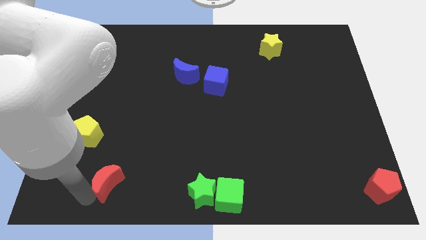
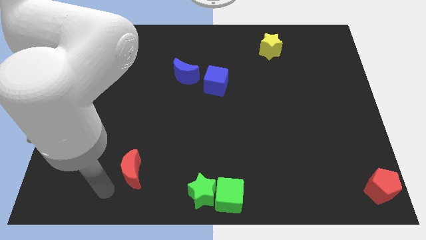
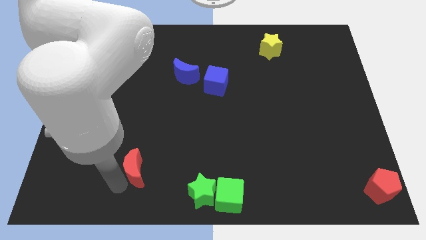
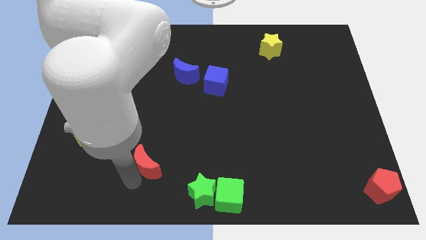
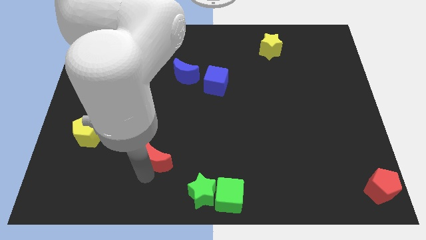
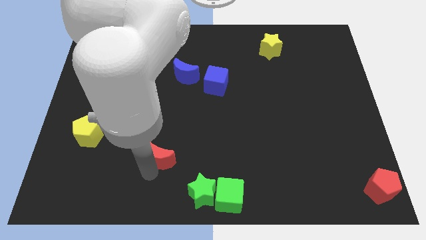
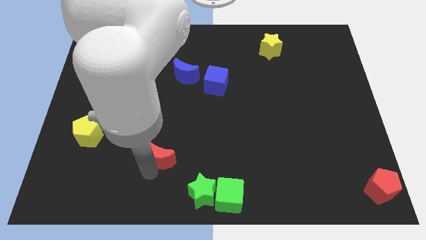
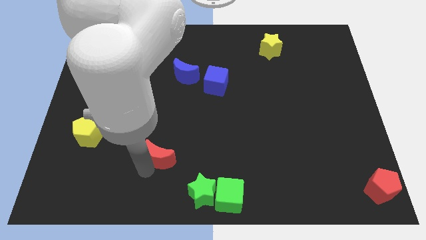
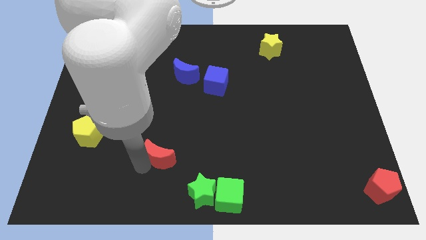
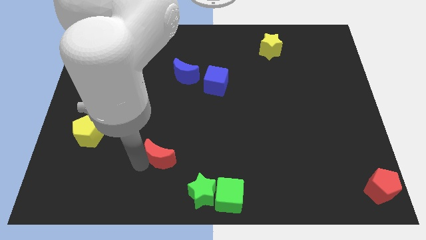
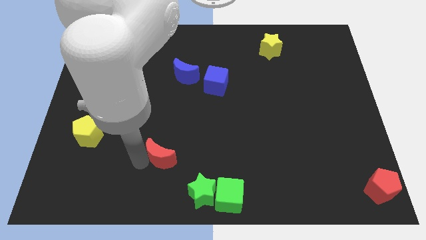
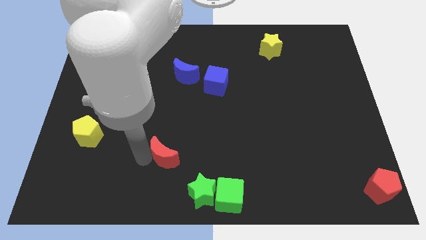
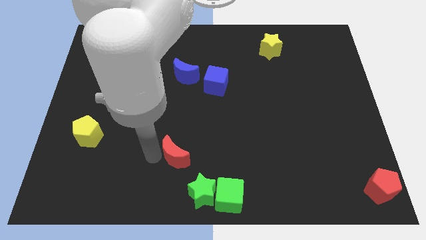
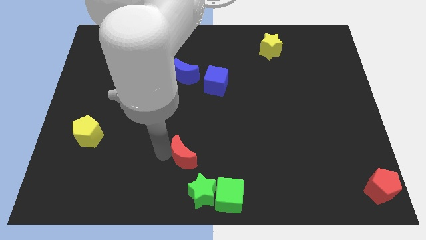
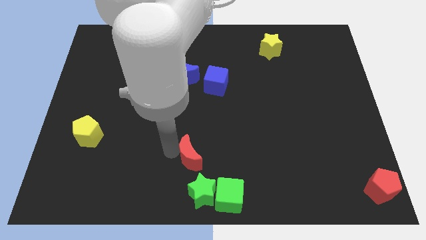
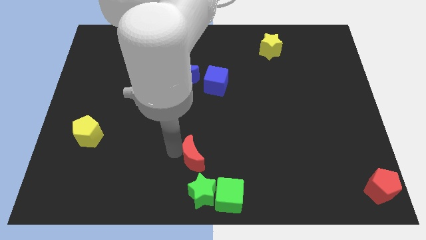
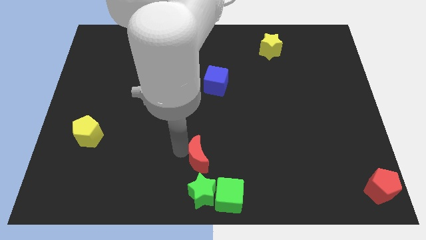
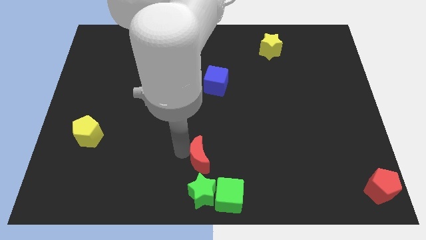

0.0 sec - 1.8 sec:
place the red crescent above the green star

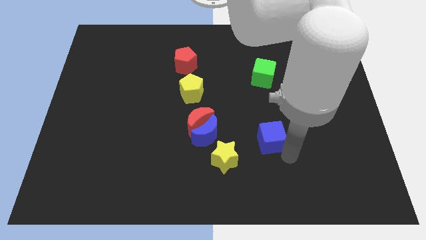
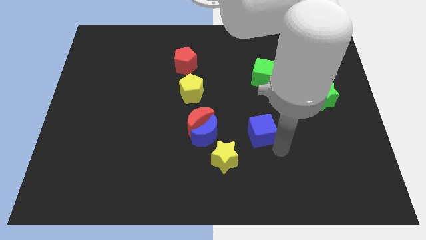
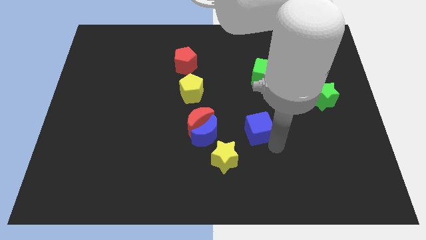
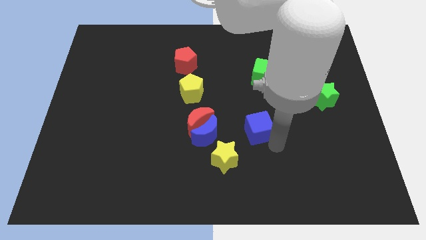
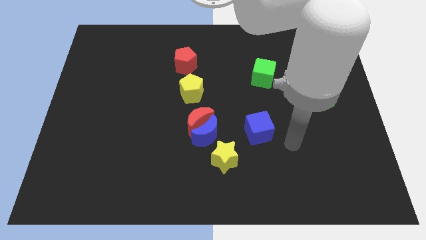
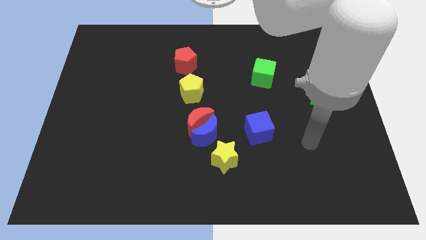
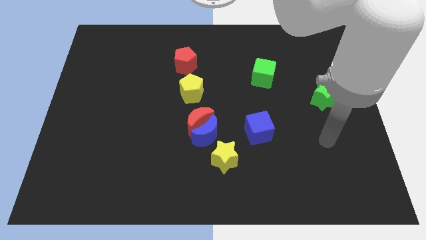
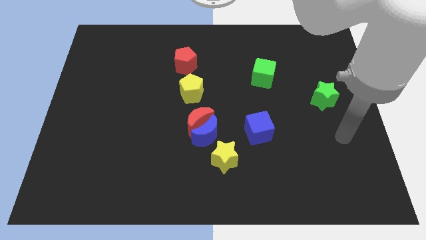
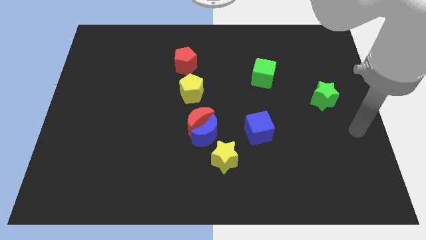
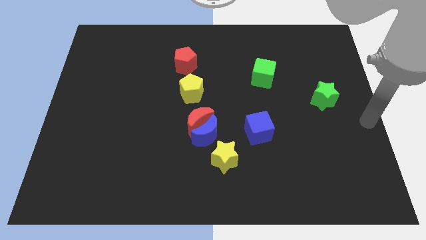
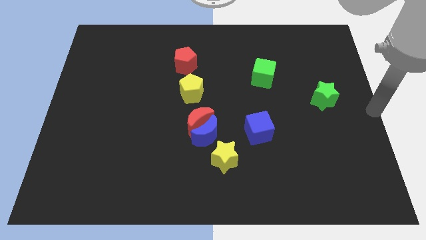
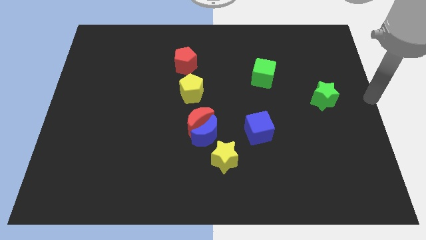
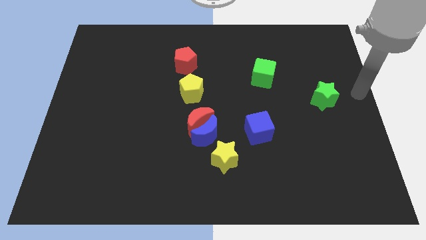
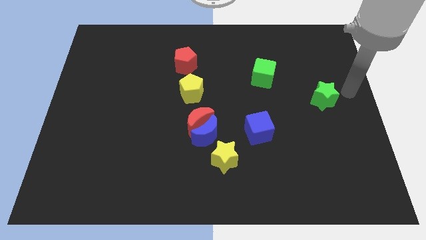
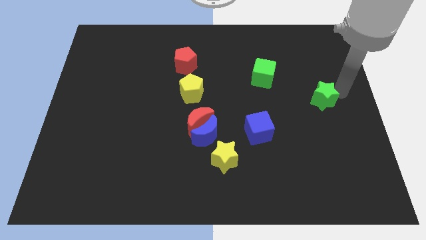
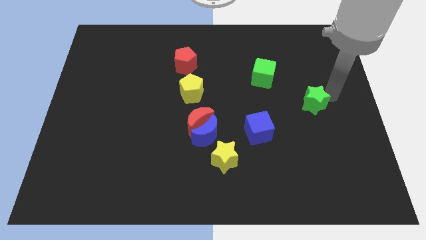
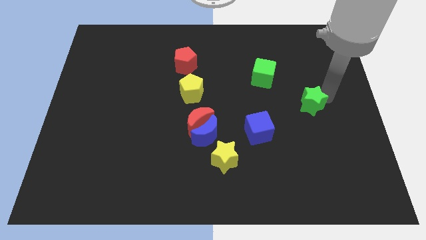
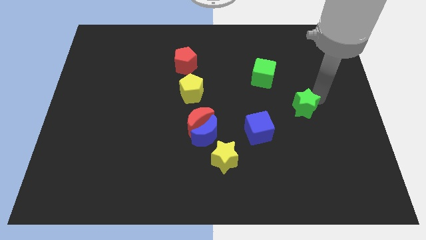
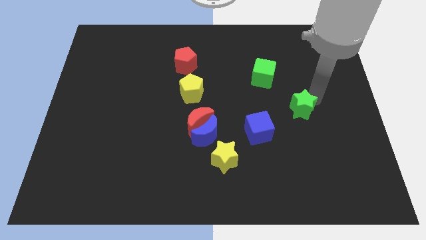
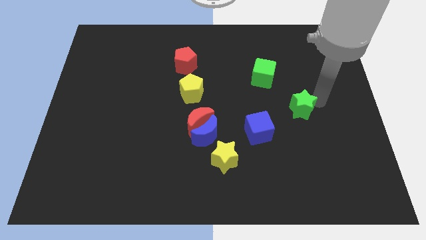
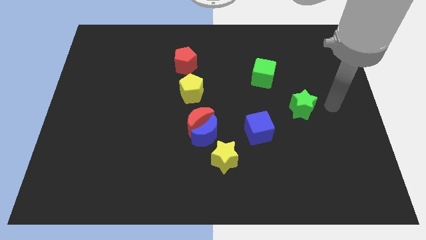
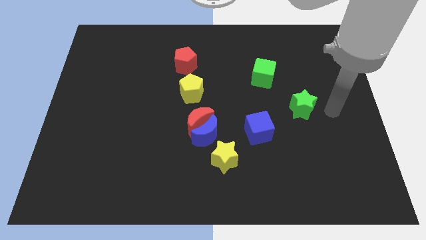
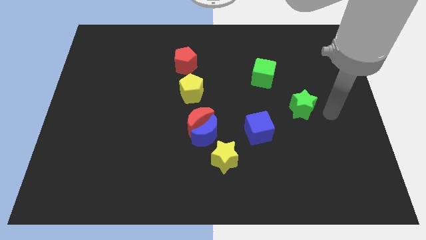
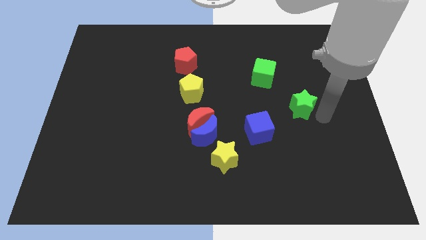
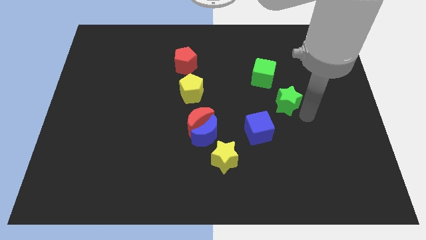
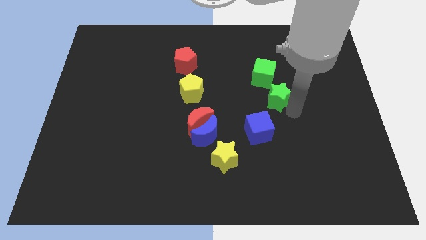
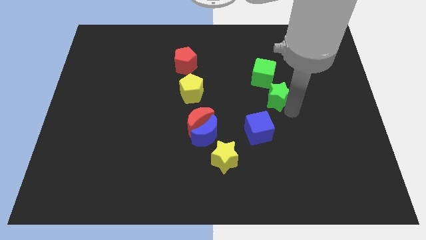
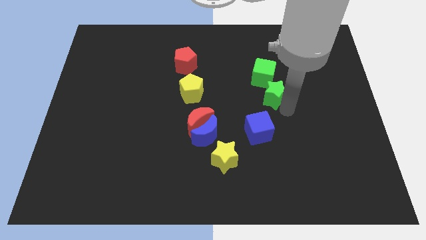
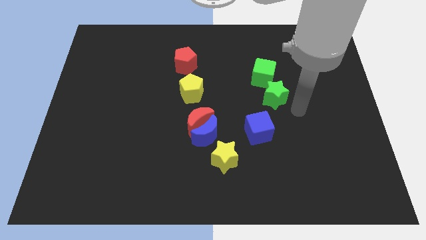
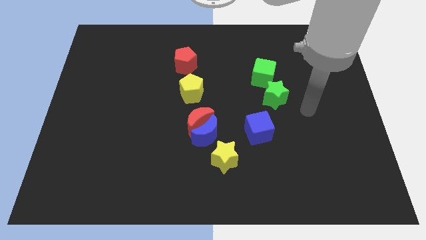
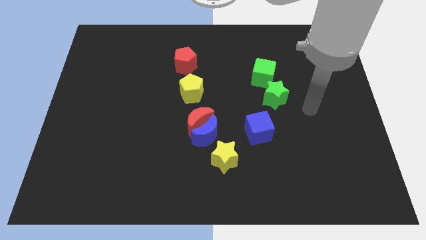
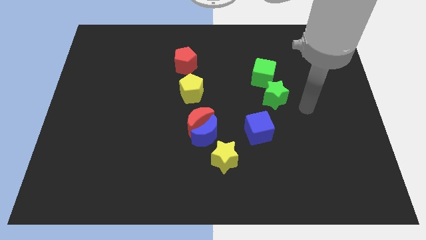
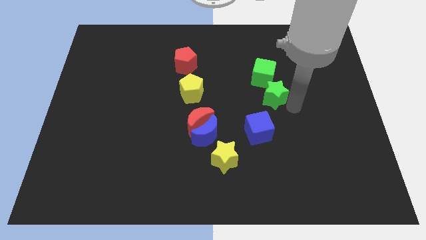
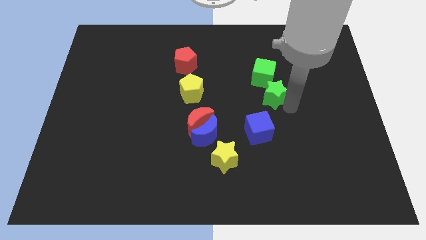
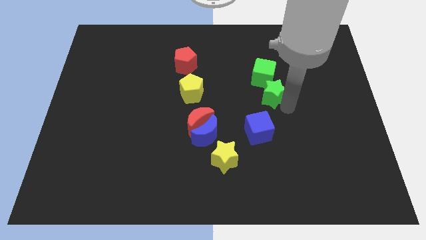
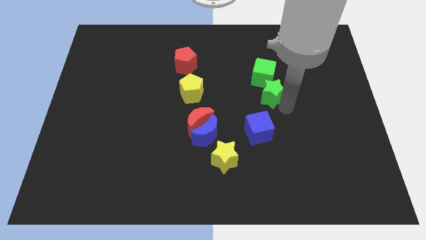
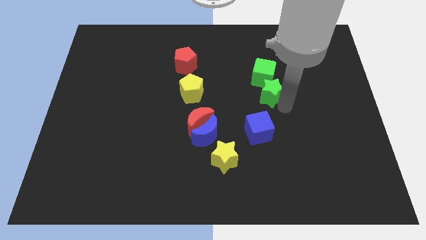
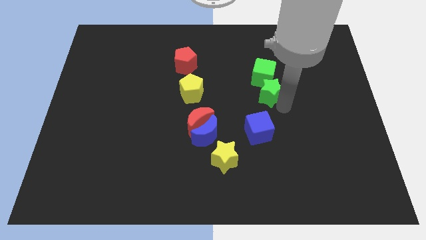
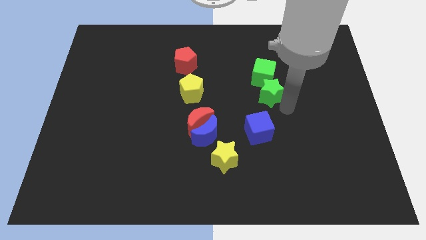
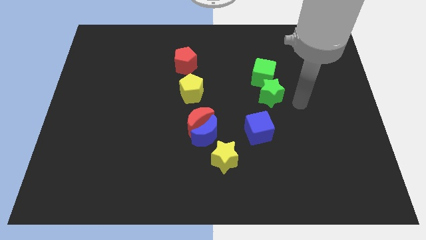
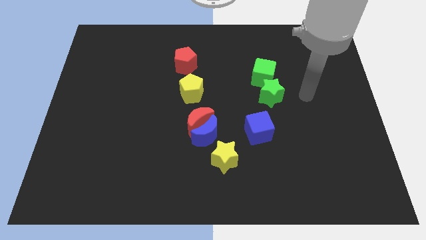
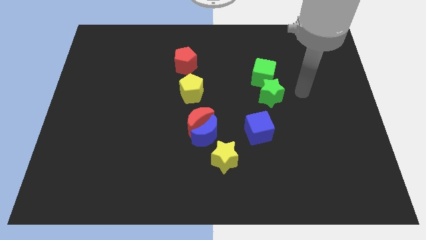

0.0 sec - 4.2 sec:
place the green star below the green cube

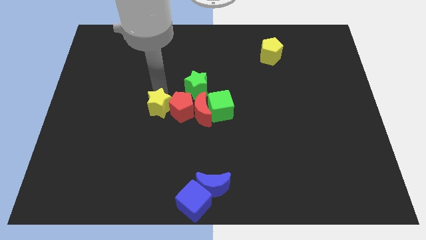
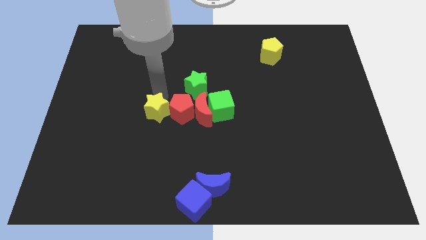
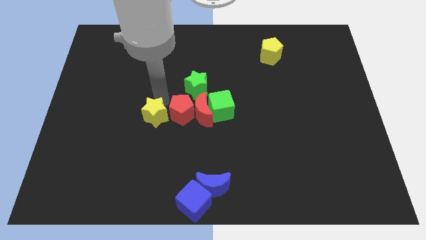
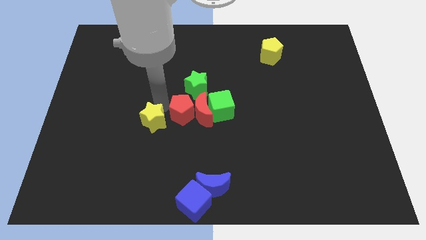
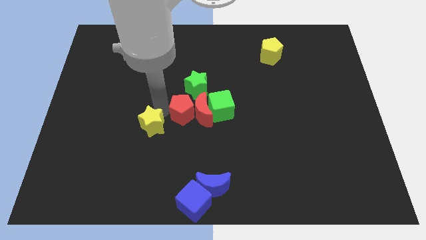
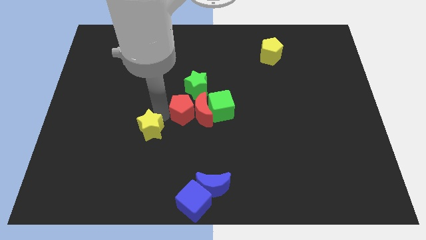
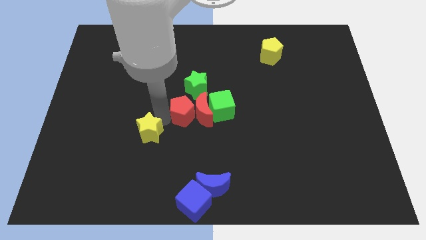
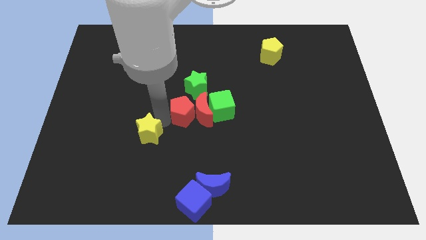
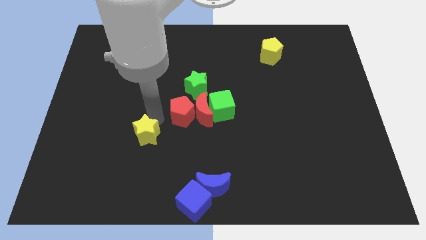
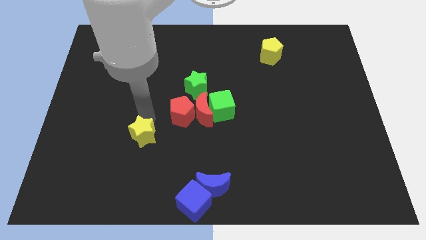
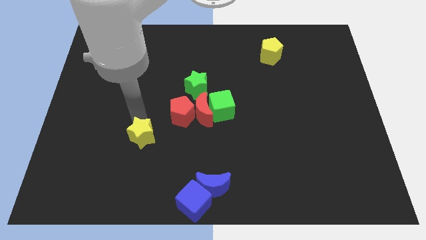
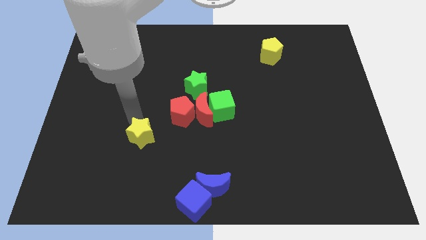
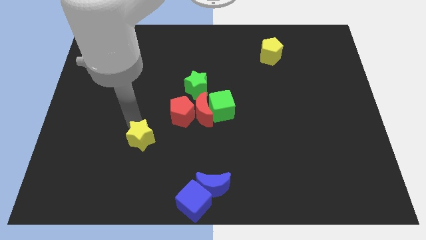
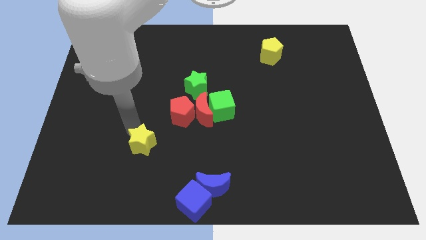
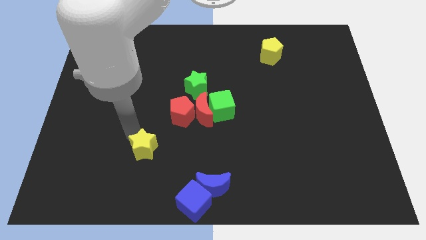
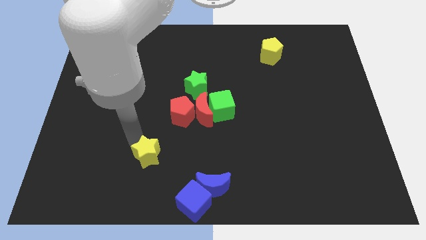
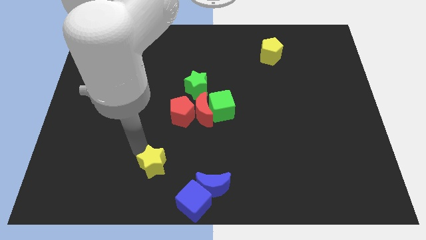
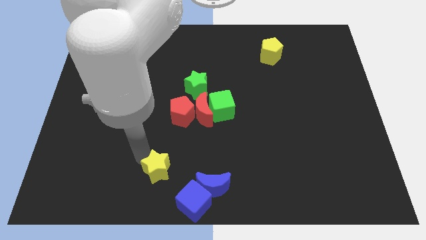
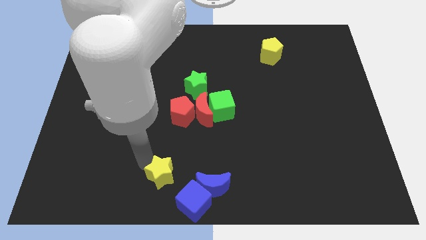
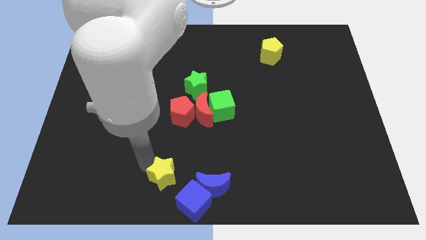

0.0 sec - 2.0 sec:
separate the yellow star from red pentagon

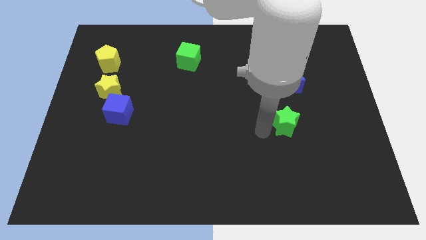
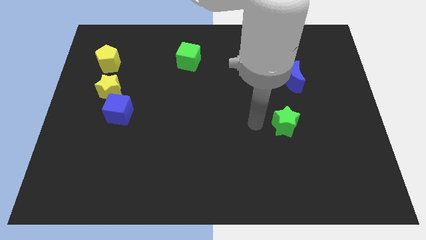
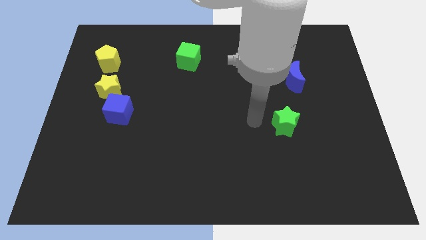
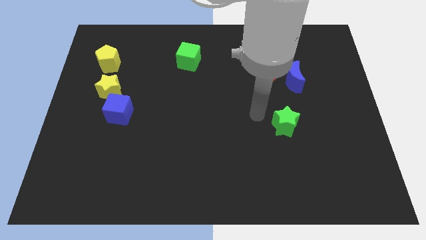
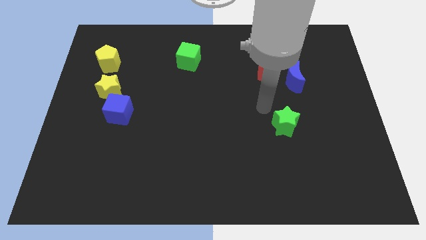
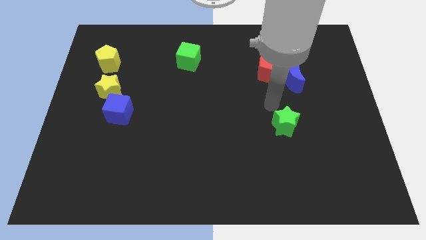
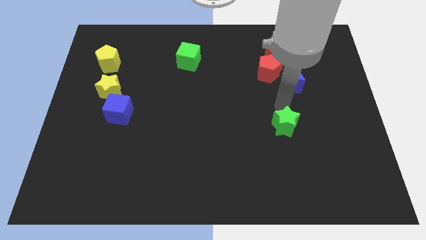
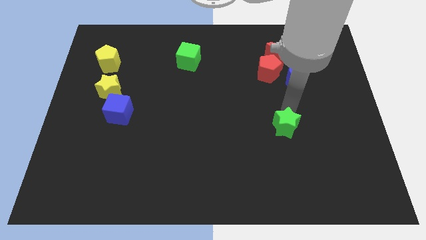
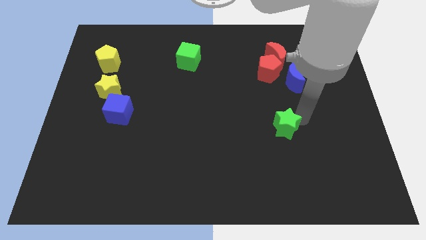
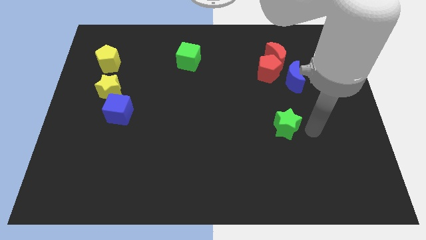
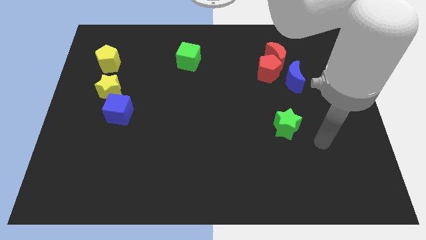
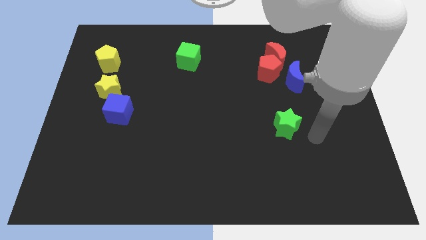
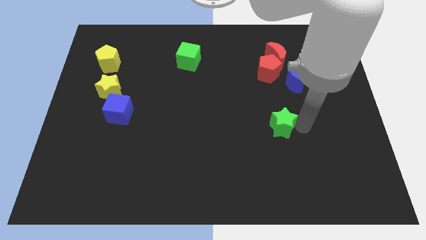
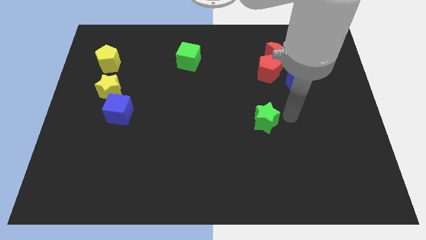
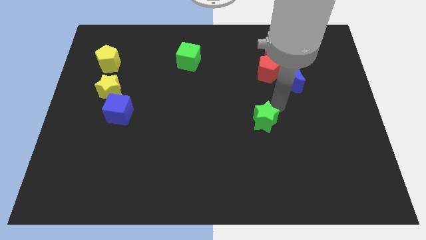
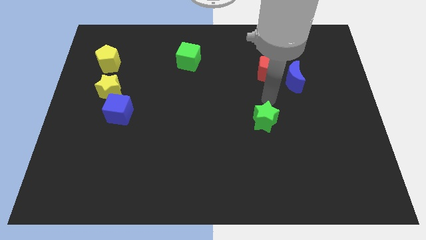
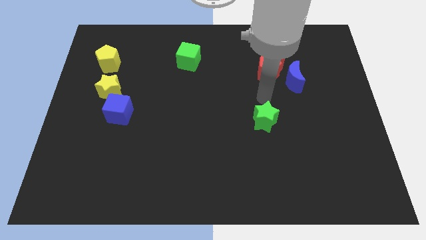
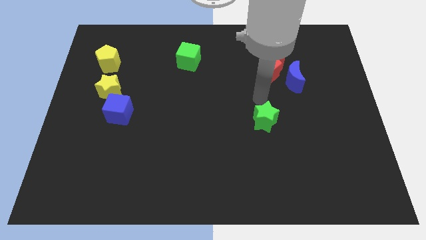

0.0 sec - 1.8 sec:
place green star to the bottom of red pentagon
